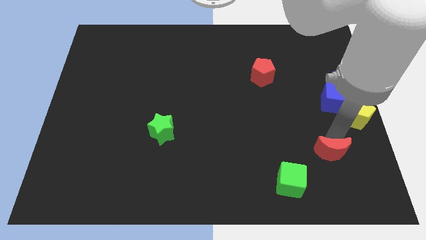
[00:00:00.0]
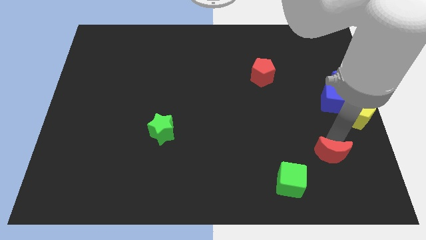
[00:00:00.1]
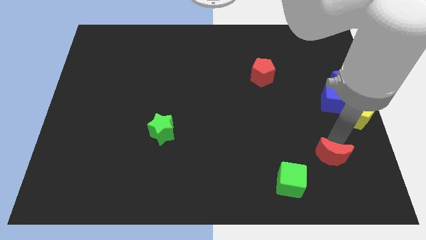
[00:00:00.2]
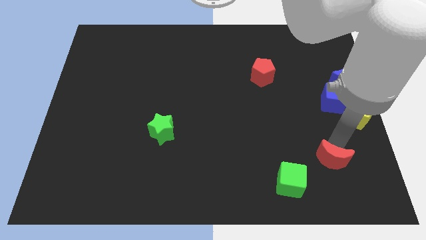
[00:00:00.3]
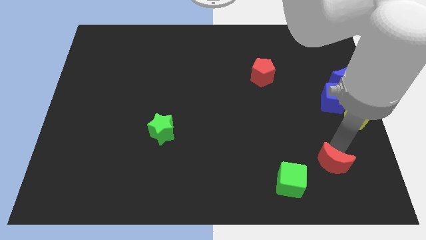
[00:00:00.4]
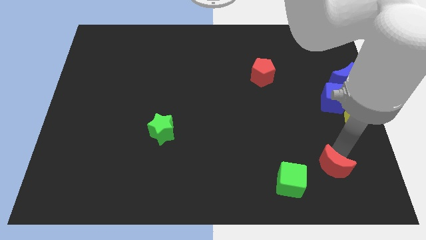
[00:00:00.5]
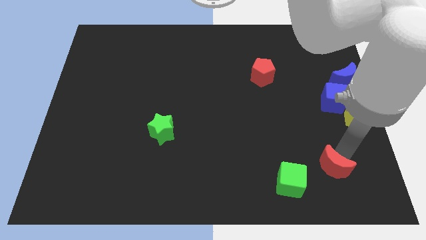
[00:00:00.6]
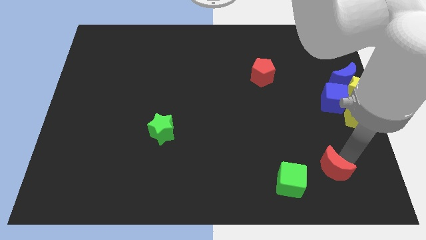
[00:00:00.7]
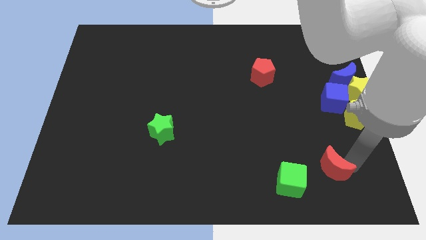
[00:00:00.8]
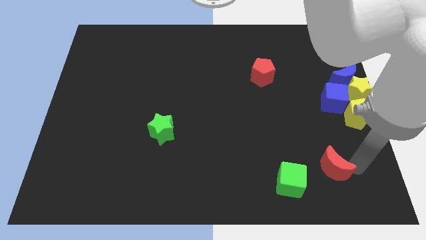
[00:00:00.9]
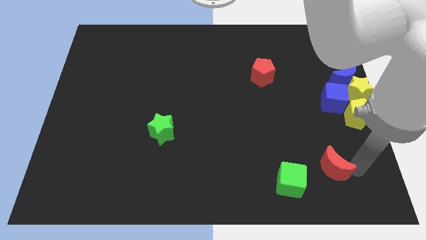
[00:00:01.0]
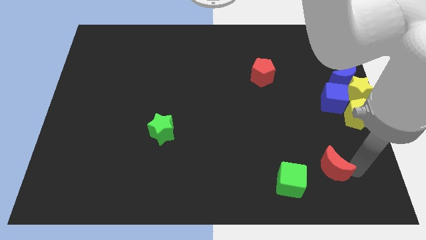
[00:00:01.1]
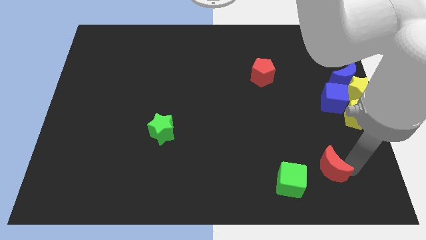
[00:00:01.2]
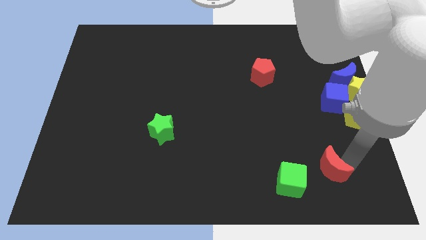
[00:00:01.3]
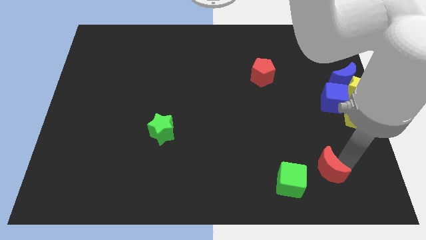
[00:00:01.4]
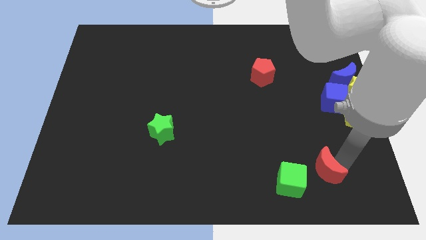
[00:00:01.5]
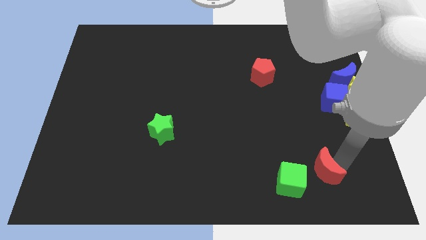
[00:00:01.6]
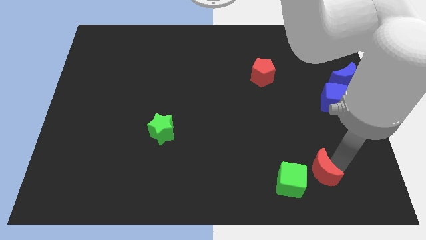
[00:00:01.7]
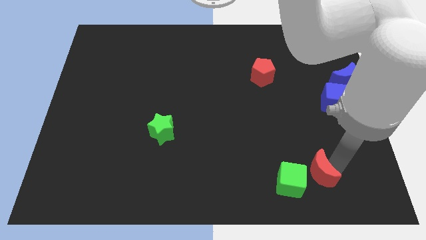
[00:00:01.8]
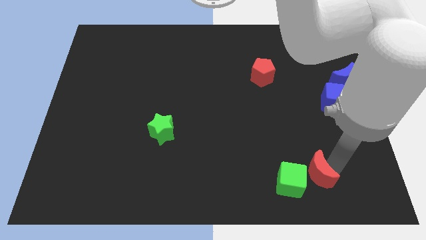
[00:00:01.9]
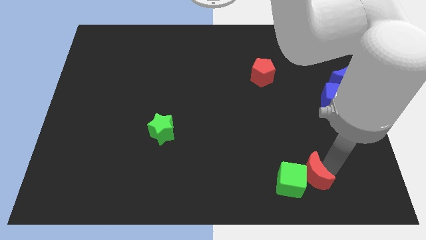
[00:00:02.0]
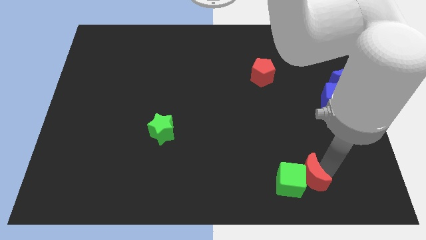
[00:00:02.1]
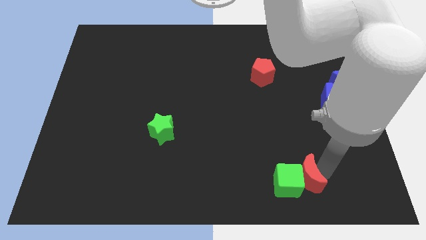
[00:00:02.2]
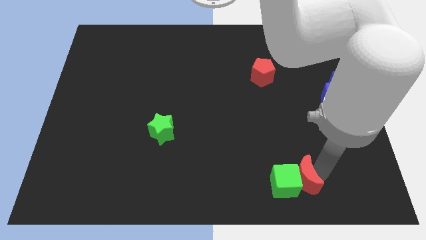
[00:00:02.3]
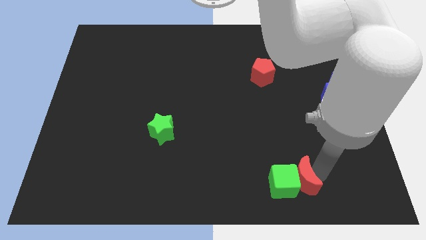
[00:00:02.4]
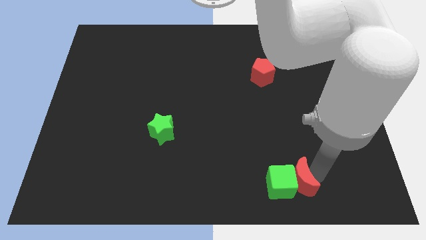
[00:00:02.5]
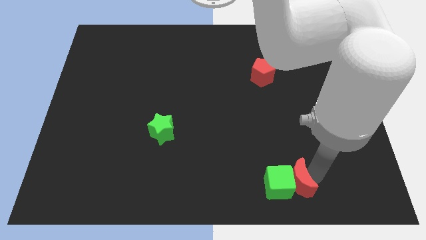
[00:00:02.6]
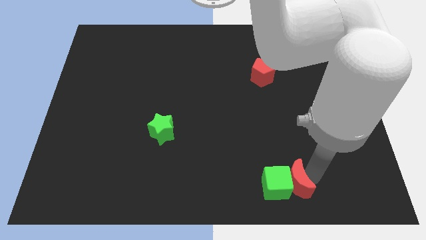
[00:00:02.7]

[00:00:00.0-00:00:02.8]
push the red crescent into the green cube

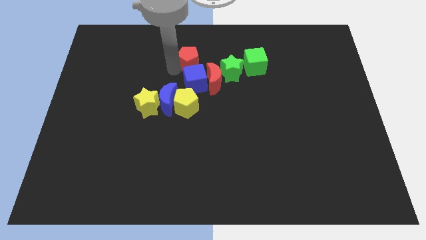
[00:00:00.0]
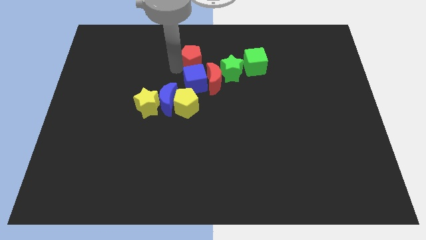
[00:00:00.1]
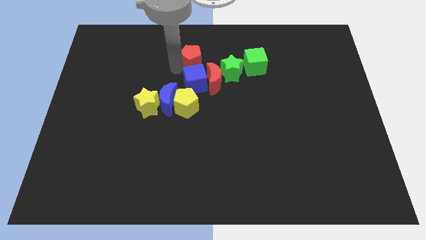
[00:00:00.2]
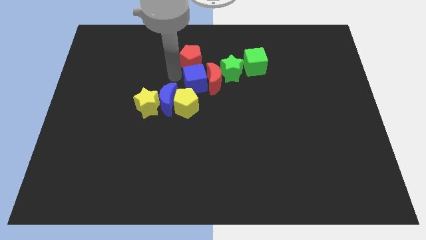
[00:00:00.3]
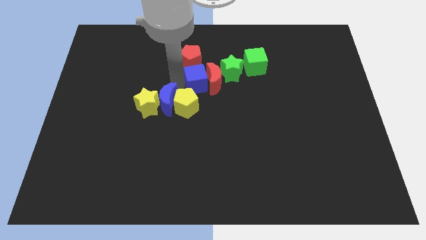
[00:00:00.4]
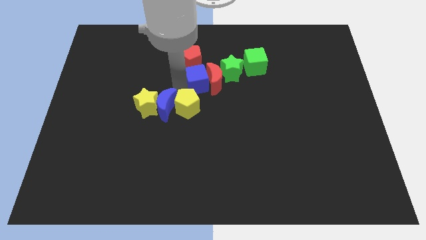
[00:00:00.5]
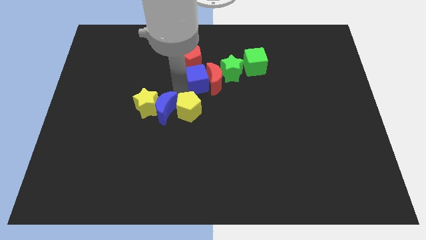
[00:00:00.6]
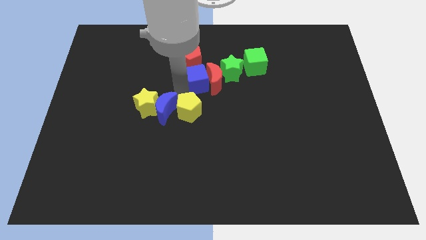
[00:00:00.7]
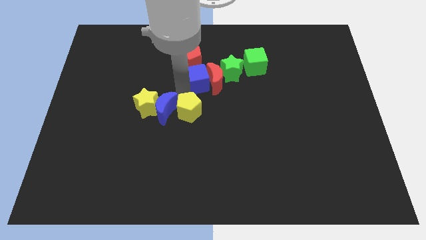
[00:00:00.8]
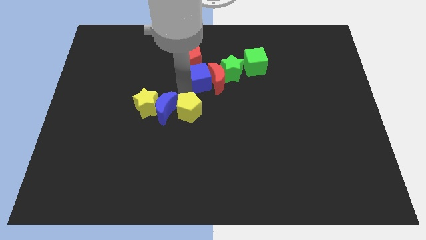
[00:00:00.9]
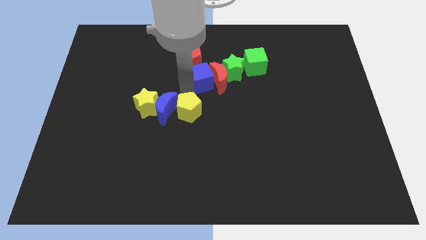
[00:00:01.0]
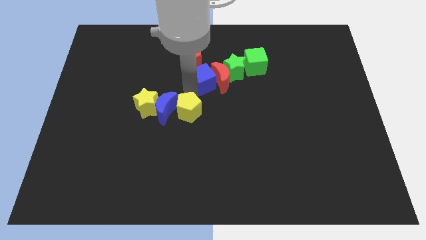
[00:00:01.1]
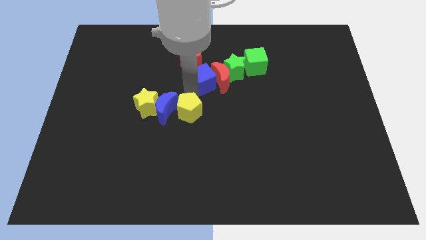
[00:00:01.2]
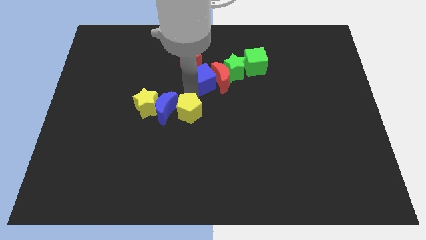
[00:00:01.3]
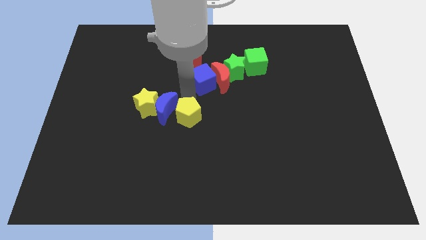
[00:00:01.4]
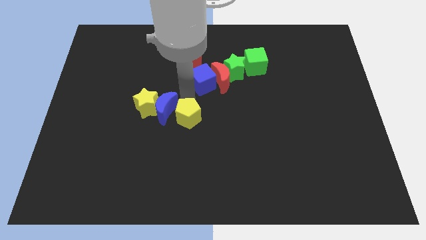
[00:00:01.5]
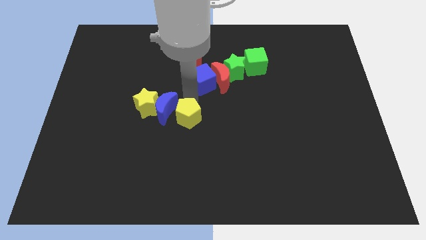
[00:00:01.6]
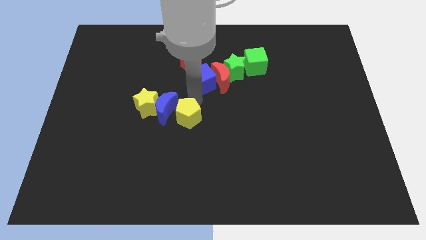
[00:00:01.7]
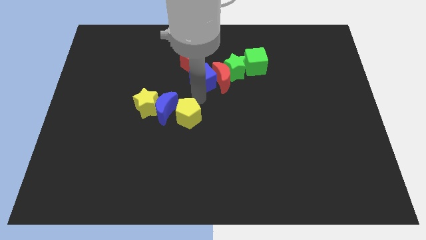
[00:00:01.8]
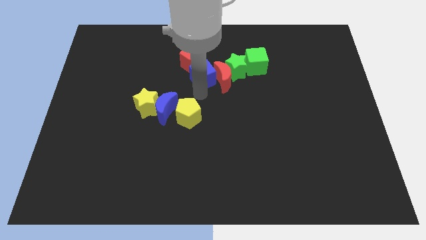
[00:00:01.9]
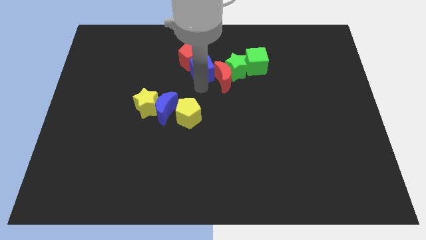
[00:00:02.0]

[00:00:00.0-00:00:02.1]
separate blue cube and yellow pentagon

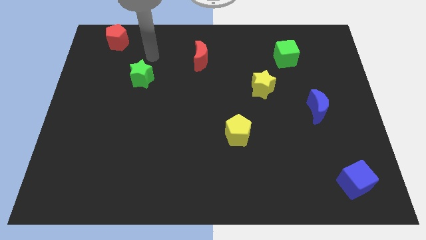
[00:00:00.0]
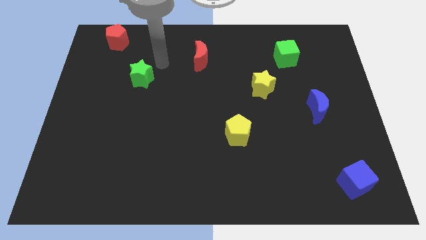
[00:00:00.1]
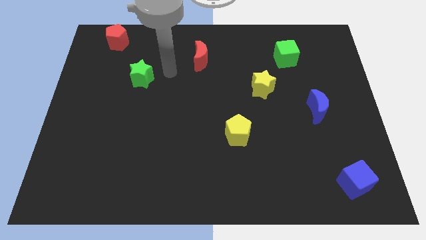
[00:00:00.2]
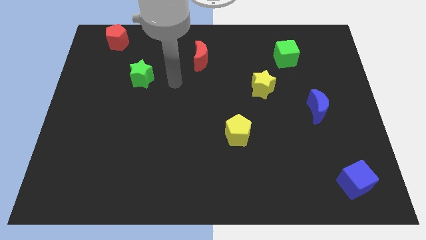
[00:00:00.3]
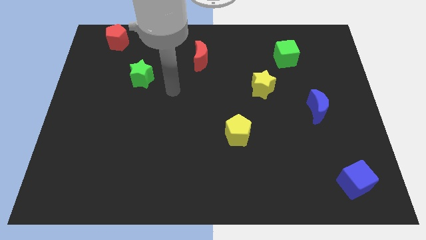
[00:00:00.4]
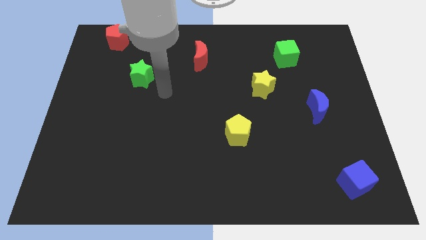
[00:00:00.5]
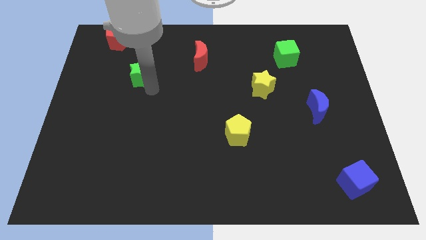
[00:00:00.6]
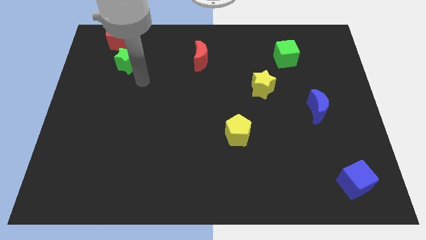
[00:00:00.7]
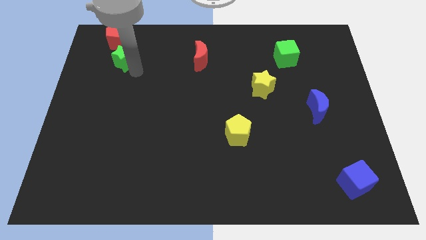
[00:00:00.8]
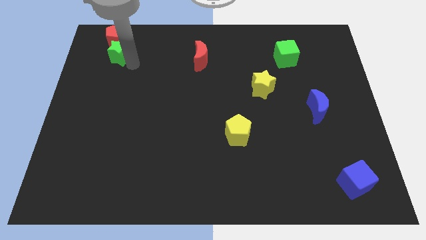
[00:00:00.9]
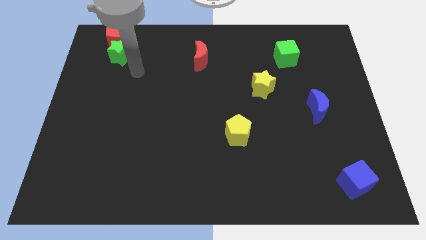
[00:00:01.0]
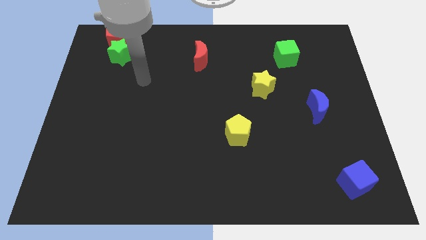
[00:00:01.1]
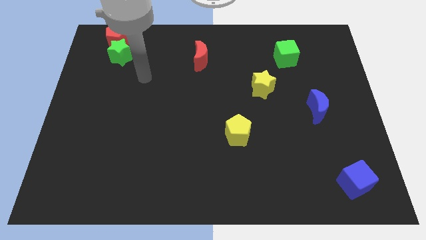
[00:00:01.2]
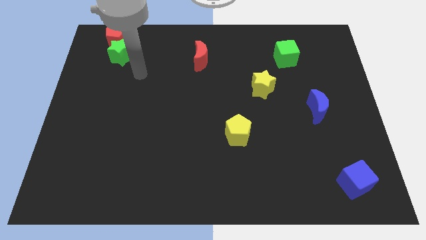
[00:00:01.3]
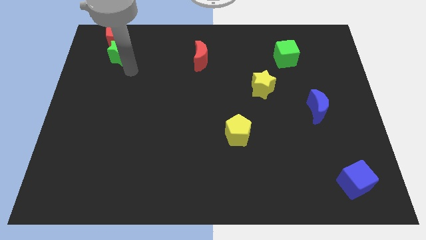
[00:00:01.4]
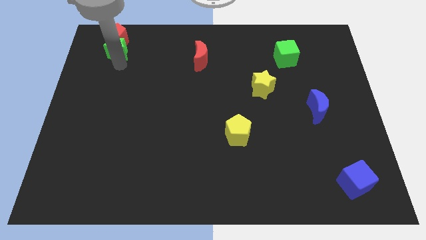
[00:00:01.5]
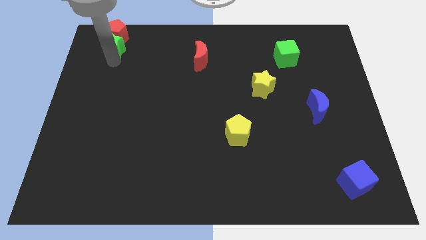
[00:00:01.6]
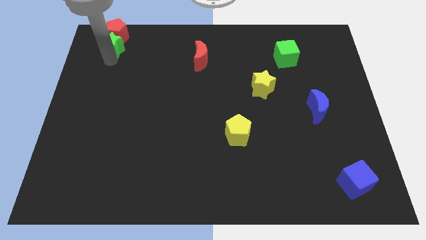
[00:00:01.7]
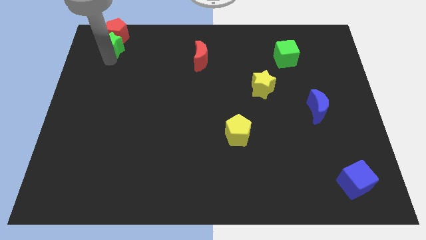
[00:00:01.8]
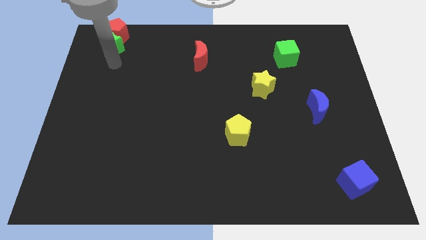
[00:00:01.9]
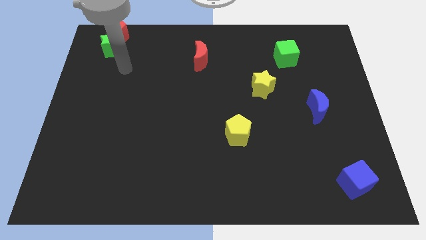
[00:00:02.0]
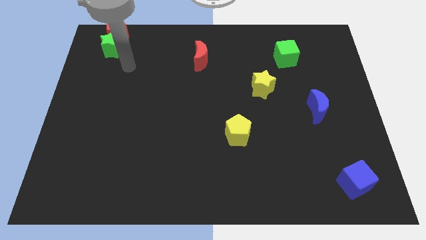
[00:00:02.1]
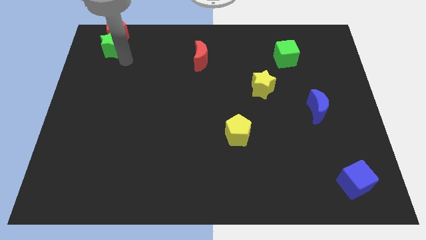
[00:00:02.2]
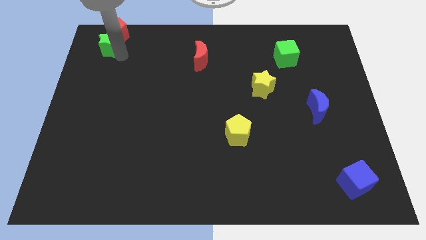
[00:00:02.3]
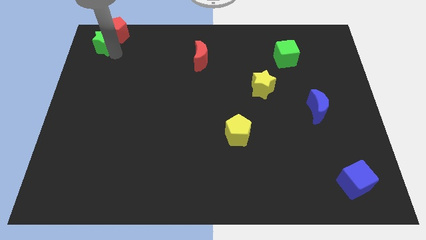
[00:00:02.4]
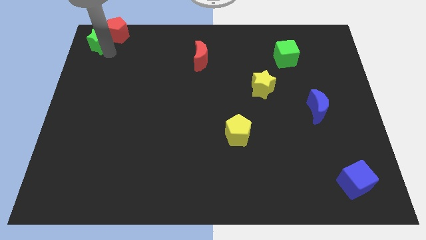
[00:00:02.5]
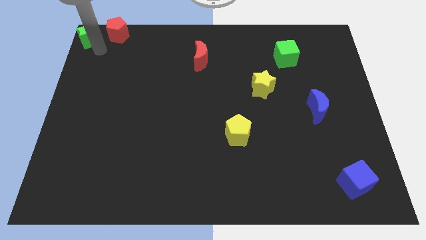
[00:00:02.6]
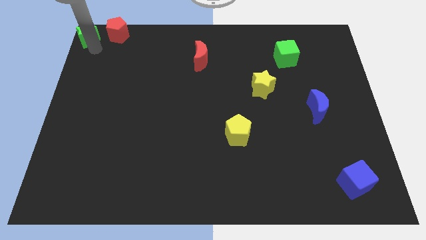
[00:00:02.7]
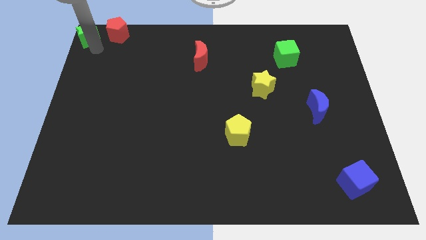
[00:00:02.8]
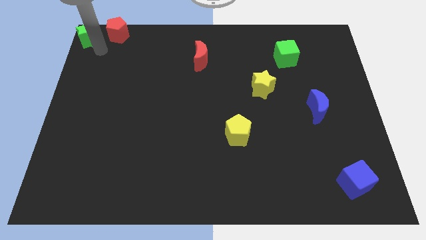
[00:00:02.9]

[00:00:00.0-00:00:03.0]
move the green star towards the top left of the board

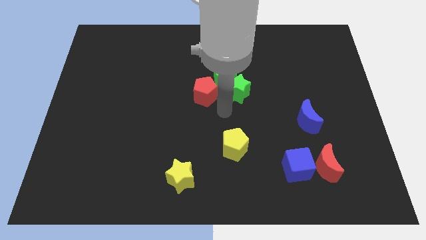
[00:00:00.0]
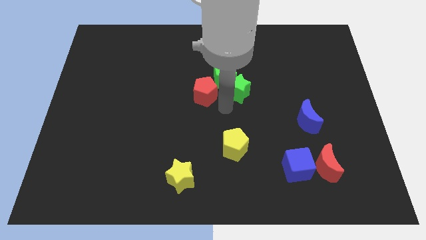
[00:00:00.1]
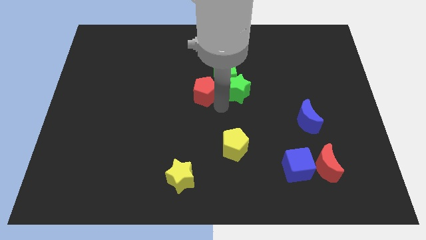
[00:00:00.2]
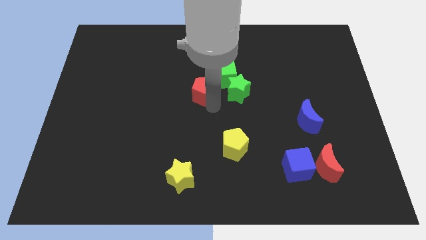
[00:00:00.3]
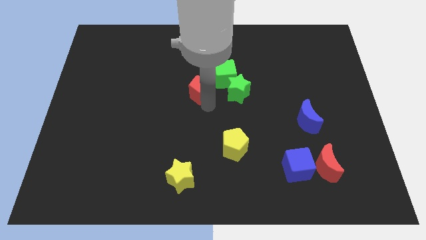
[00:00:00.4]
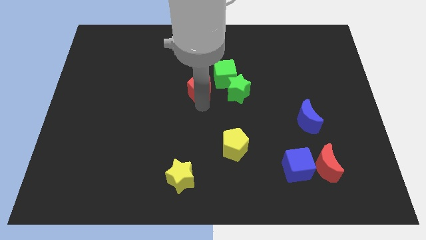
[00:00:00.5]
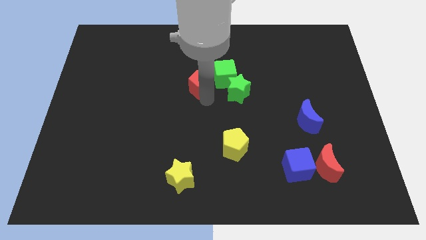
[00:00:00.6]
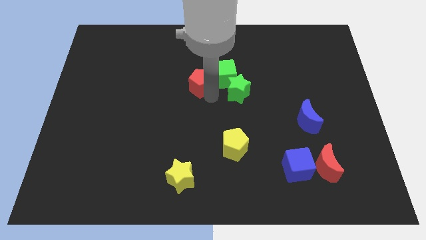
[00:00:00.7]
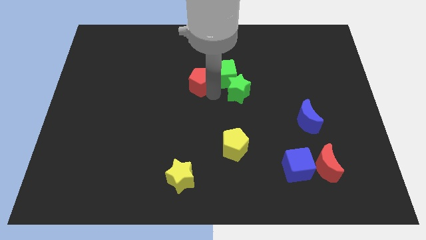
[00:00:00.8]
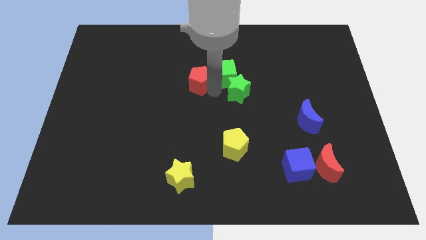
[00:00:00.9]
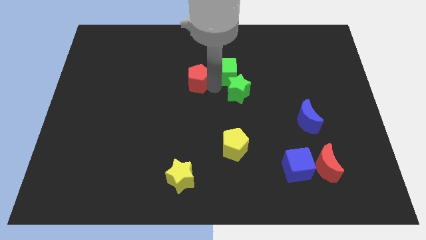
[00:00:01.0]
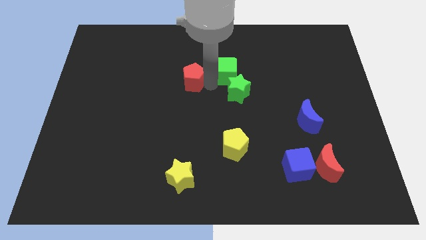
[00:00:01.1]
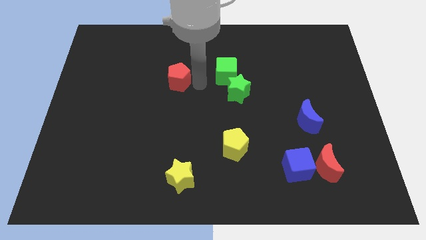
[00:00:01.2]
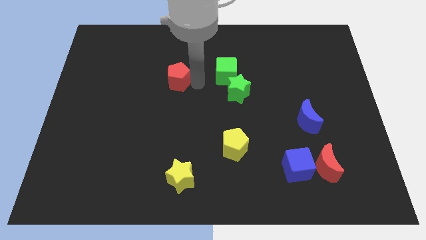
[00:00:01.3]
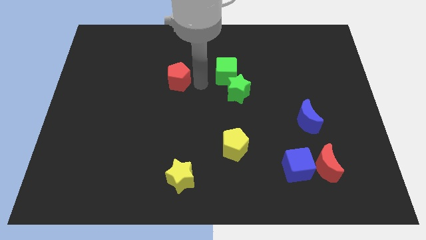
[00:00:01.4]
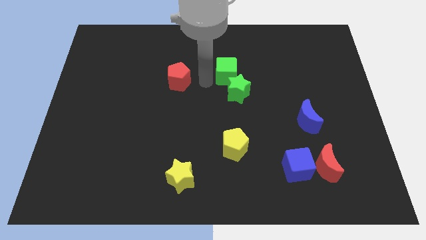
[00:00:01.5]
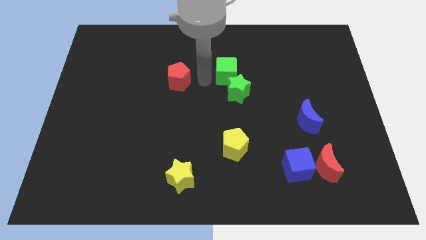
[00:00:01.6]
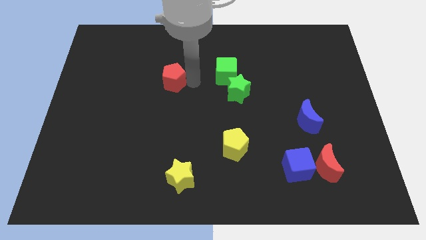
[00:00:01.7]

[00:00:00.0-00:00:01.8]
separate red pentagon from green blocks
